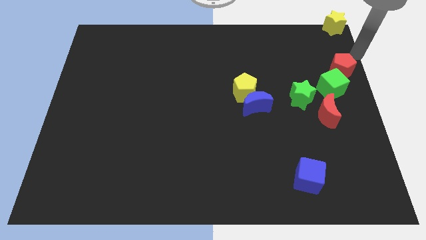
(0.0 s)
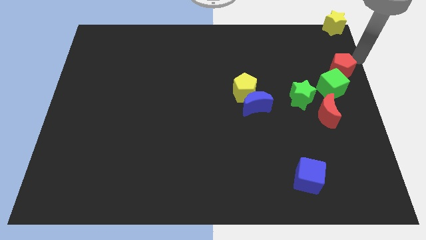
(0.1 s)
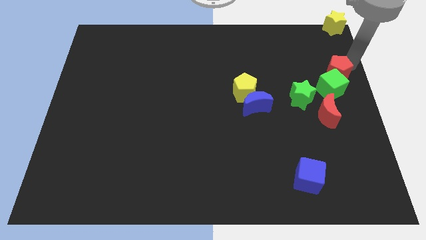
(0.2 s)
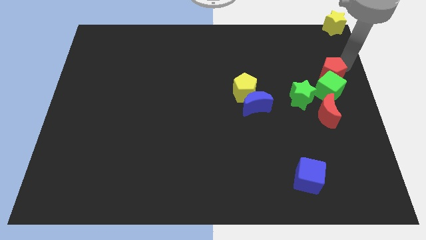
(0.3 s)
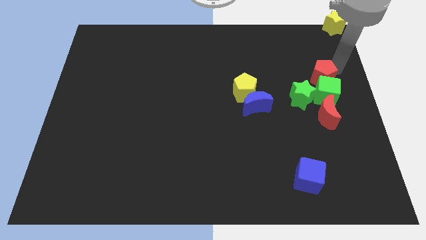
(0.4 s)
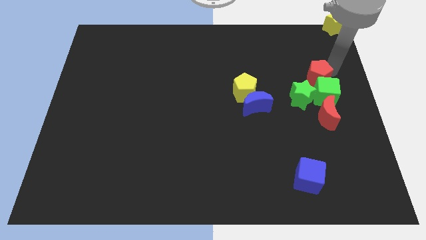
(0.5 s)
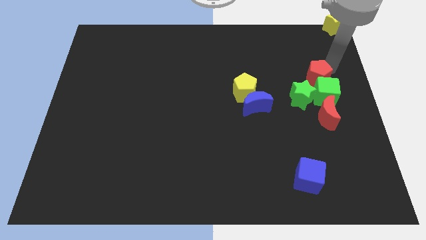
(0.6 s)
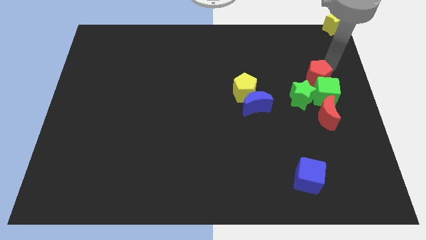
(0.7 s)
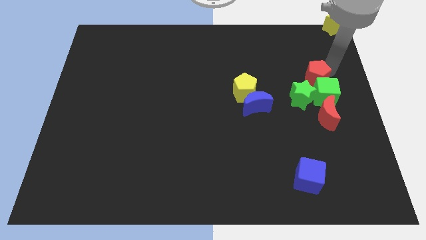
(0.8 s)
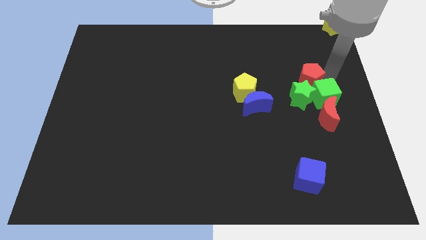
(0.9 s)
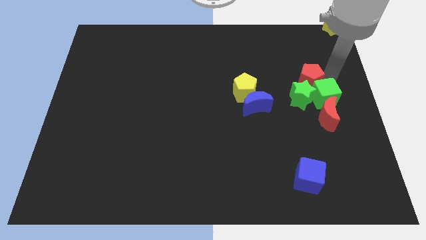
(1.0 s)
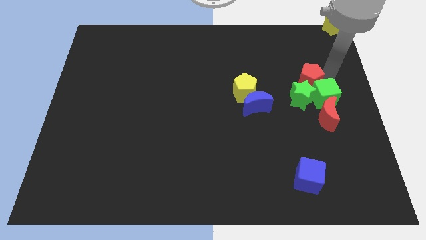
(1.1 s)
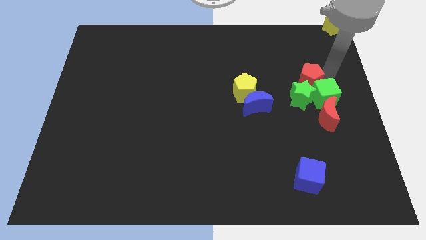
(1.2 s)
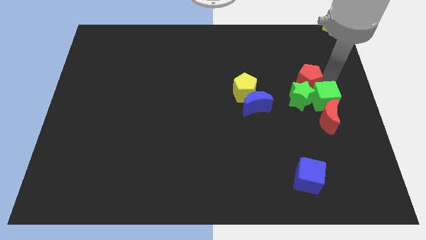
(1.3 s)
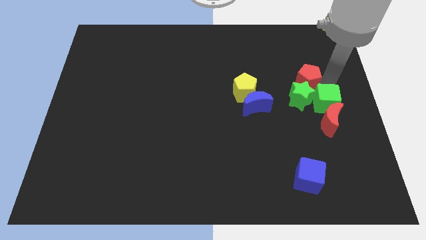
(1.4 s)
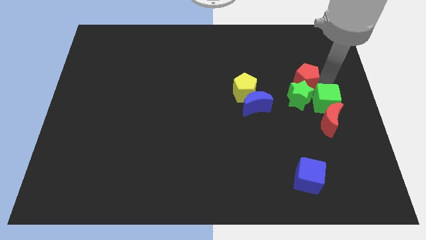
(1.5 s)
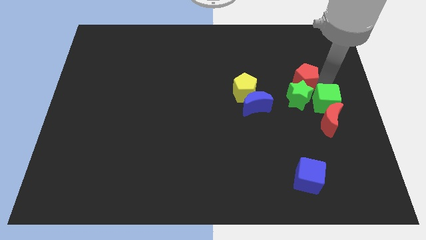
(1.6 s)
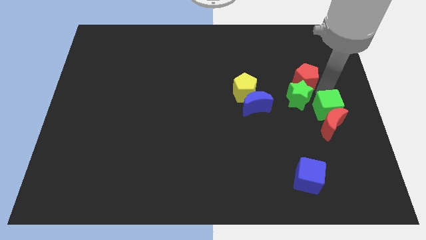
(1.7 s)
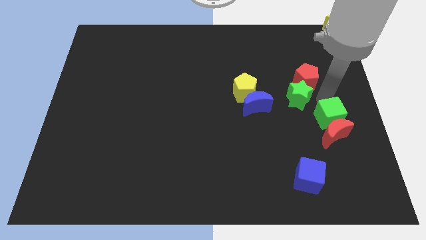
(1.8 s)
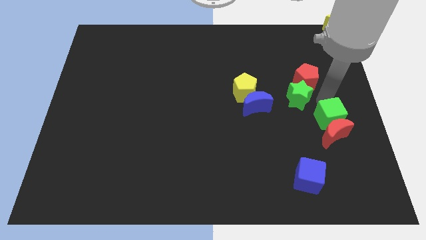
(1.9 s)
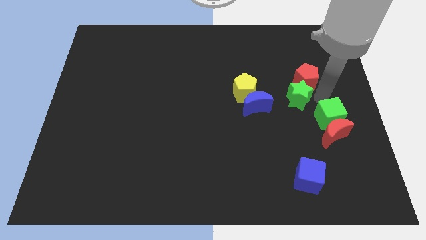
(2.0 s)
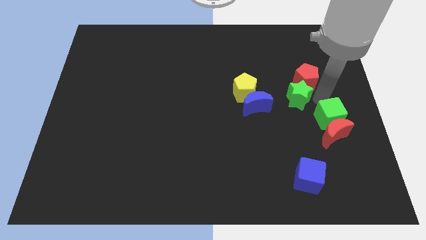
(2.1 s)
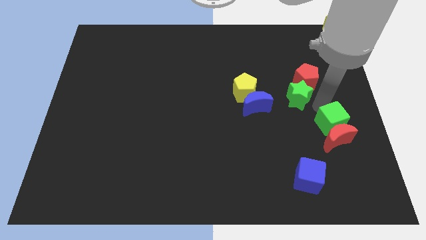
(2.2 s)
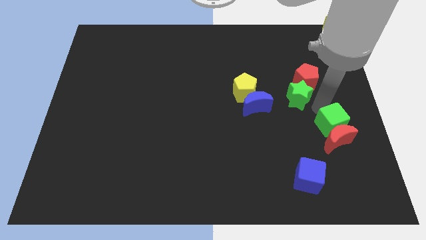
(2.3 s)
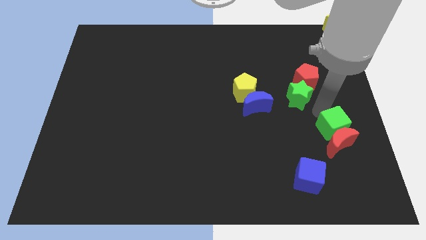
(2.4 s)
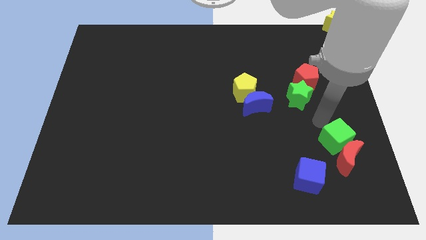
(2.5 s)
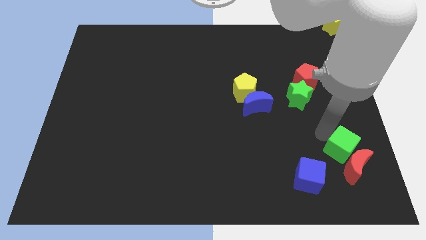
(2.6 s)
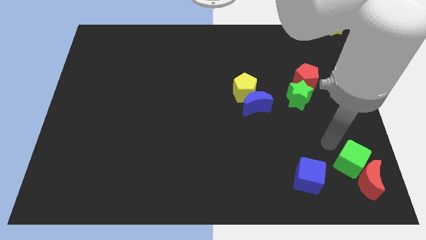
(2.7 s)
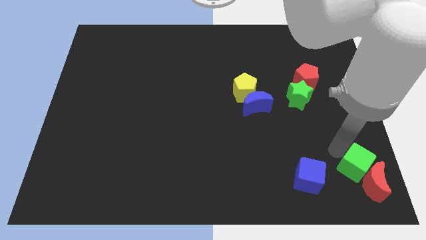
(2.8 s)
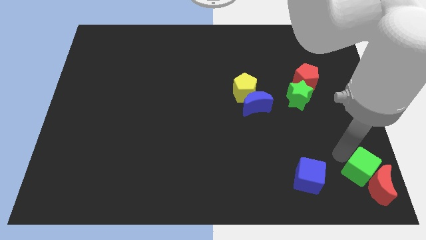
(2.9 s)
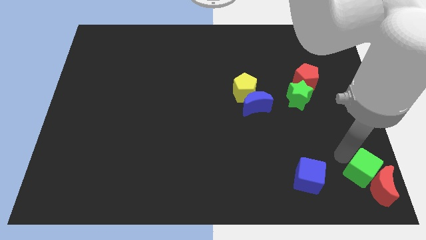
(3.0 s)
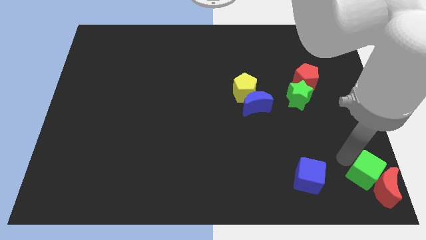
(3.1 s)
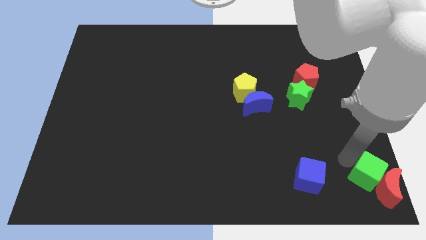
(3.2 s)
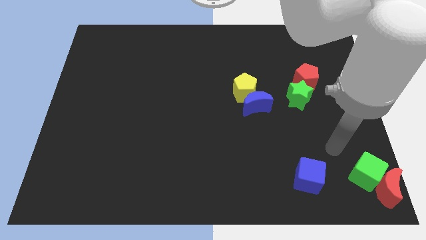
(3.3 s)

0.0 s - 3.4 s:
push green cube and red crescent towards bottom right corner

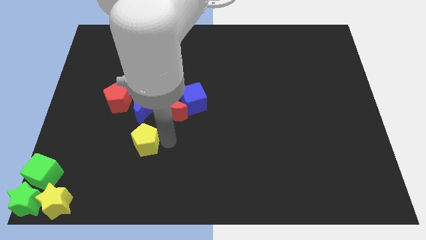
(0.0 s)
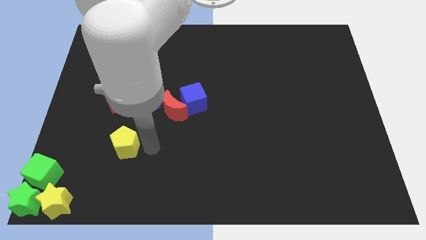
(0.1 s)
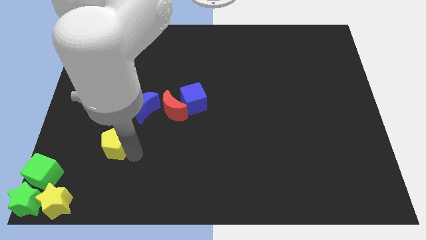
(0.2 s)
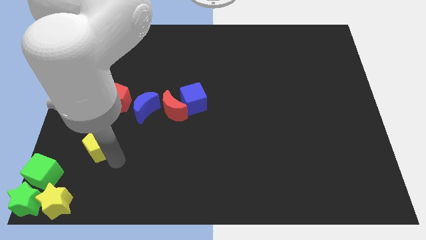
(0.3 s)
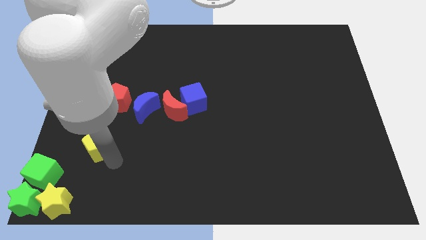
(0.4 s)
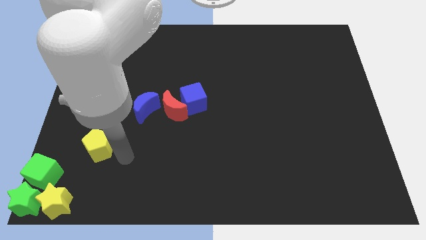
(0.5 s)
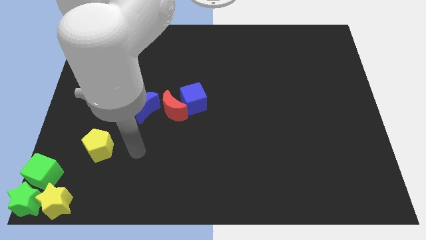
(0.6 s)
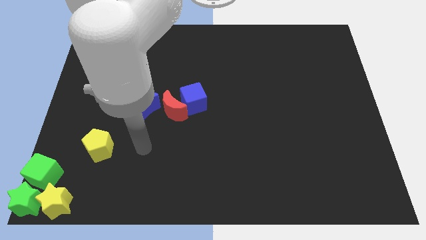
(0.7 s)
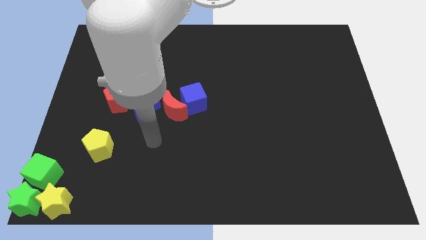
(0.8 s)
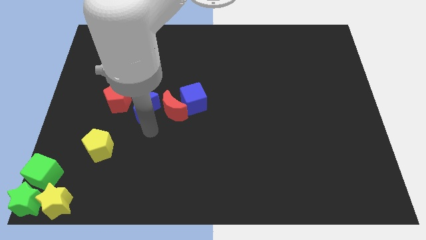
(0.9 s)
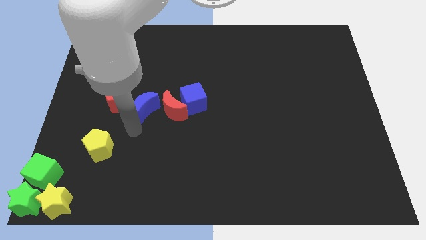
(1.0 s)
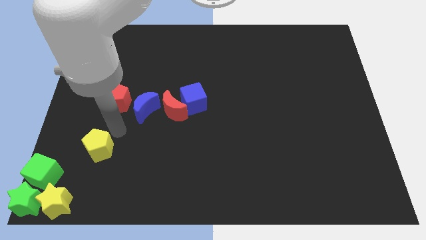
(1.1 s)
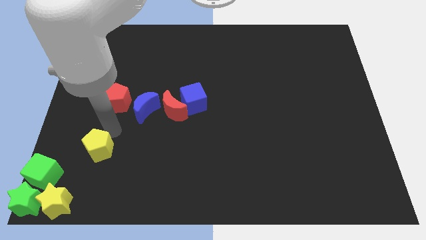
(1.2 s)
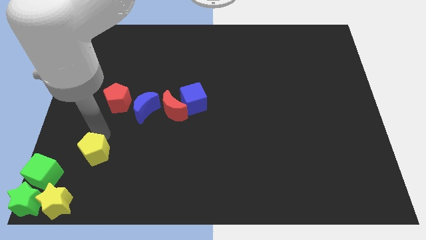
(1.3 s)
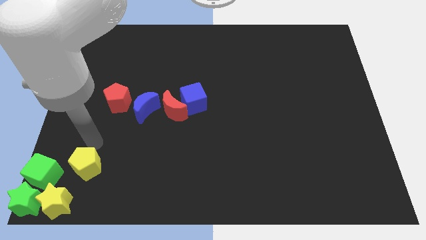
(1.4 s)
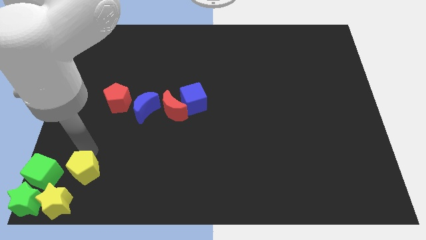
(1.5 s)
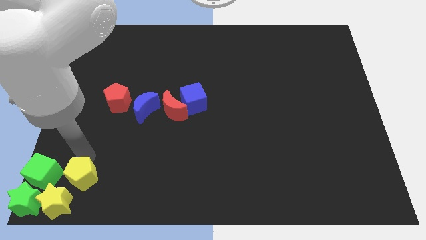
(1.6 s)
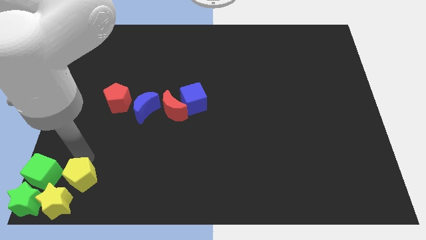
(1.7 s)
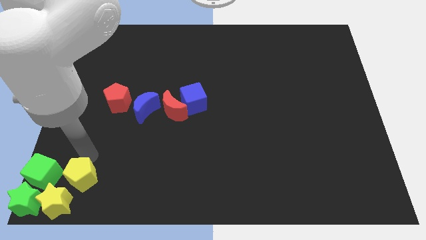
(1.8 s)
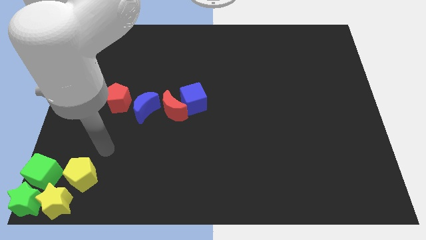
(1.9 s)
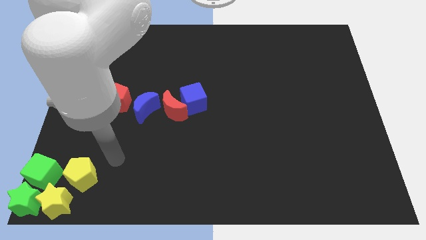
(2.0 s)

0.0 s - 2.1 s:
slide the yellow pentagon at the top right side of the yellow star

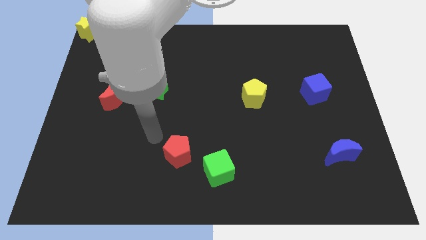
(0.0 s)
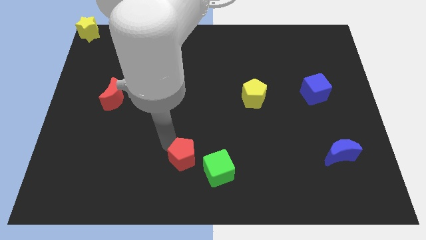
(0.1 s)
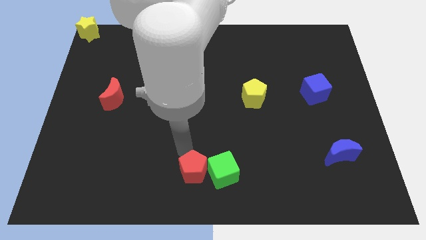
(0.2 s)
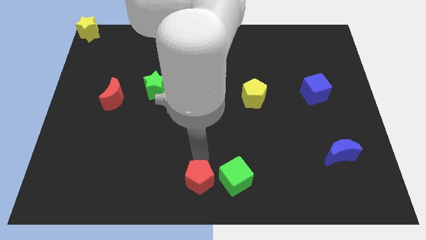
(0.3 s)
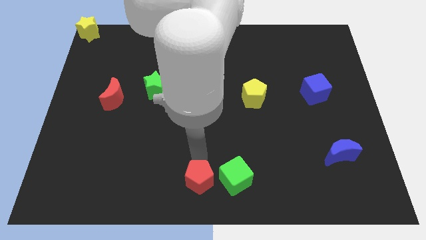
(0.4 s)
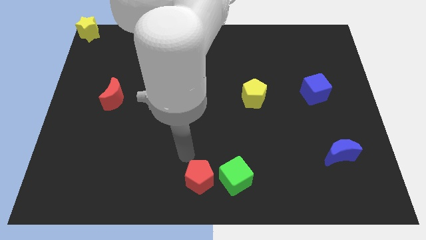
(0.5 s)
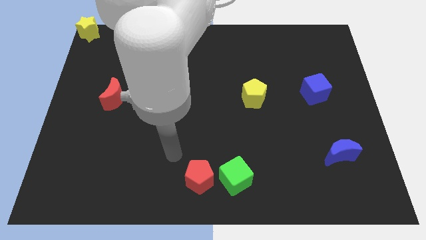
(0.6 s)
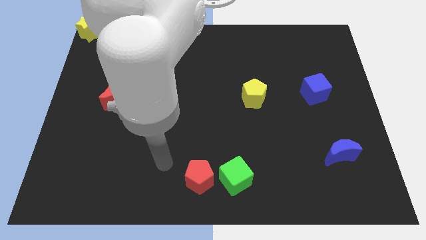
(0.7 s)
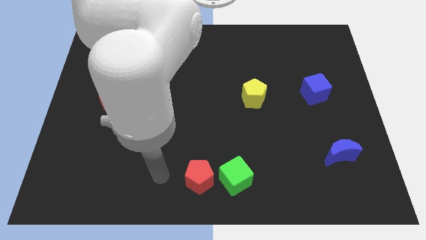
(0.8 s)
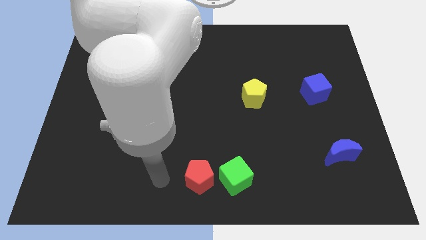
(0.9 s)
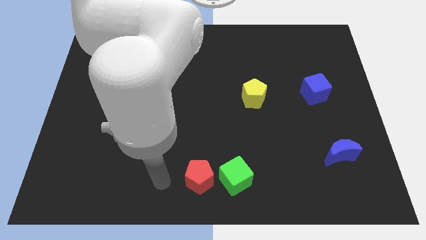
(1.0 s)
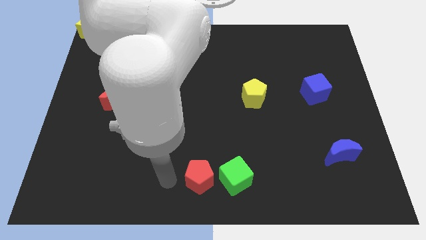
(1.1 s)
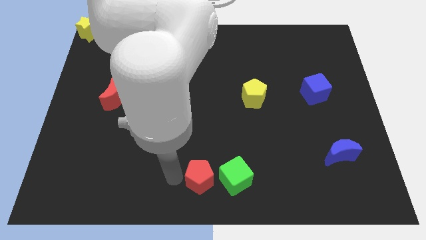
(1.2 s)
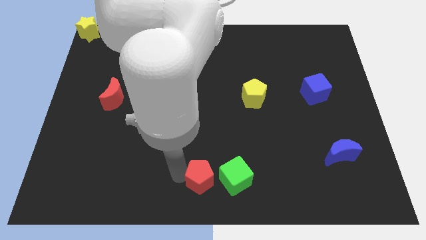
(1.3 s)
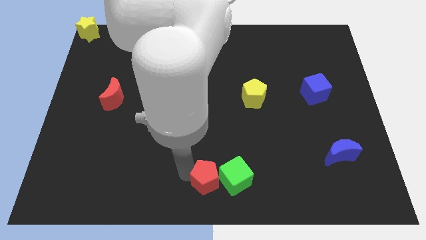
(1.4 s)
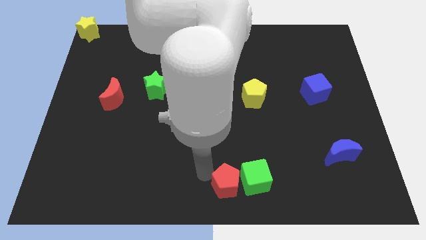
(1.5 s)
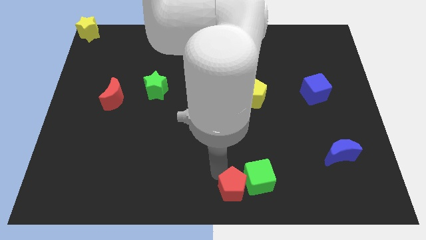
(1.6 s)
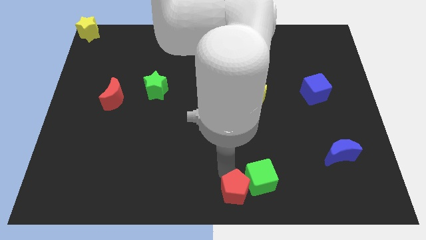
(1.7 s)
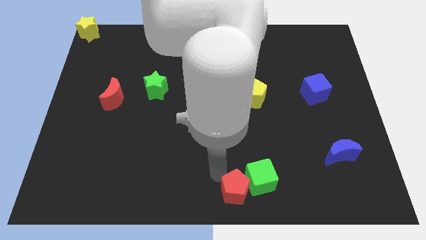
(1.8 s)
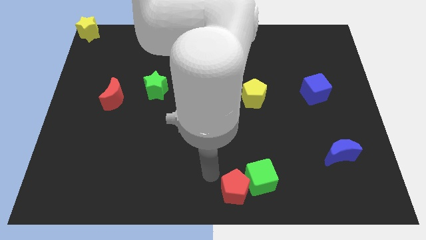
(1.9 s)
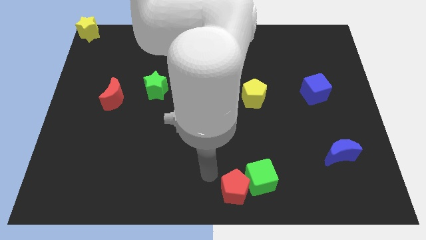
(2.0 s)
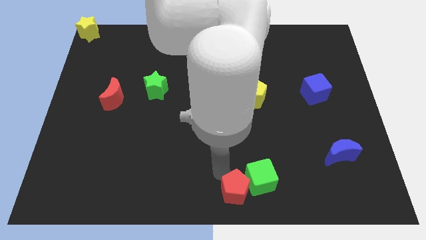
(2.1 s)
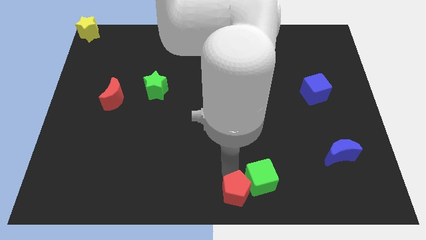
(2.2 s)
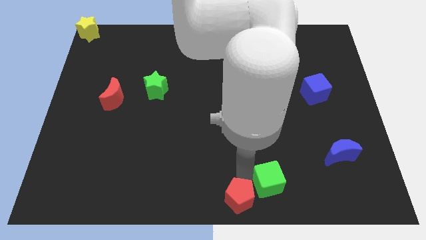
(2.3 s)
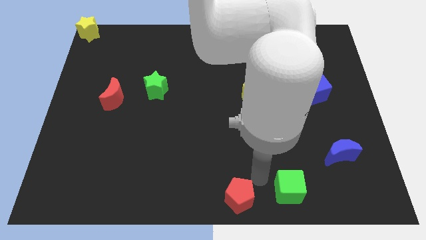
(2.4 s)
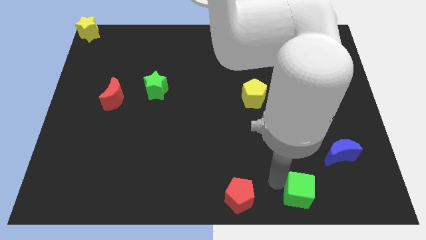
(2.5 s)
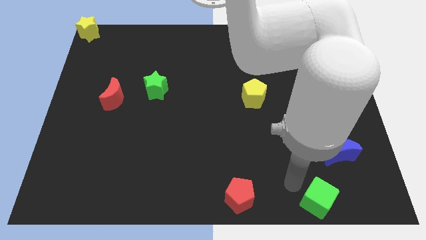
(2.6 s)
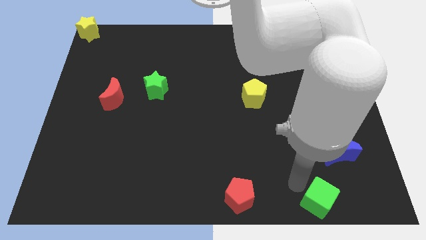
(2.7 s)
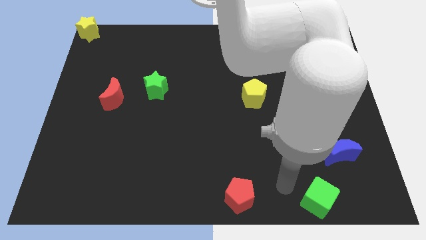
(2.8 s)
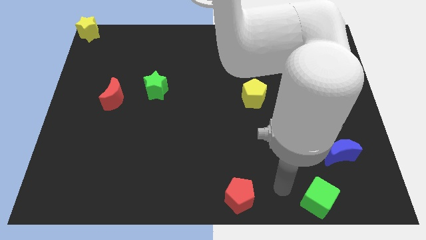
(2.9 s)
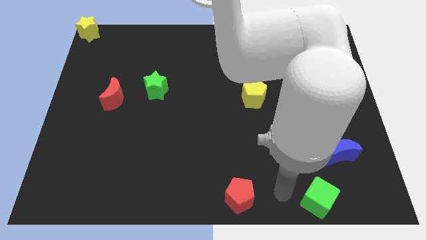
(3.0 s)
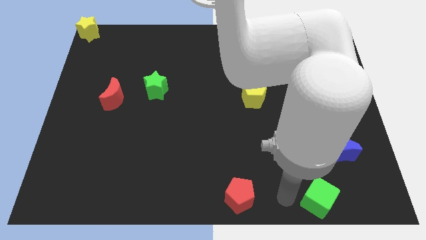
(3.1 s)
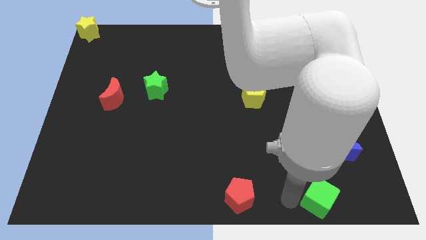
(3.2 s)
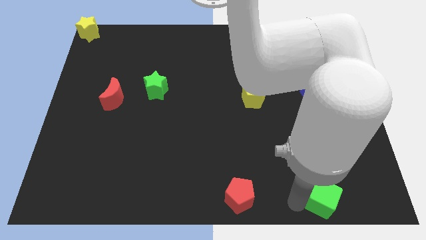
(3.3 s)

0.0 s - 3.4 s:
push the green cube and red pentagon to the bottom right side of board

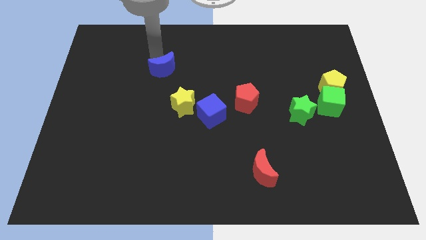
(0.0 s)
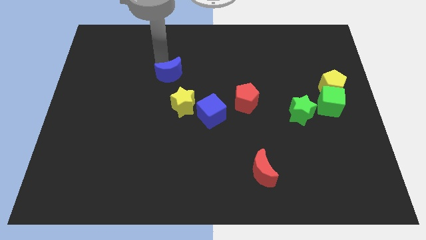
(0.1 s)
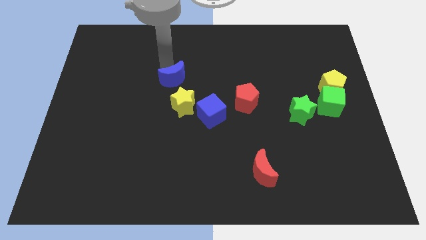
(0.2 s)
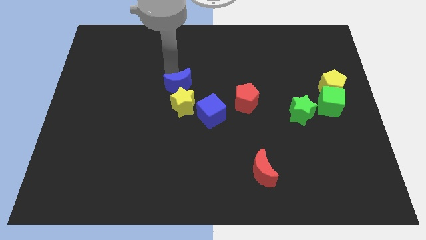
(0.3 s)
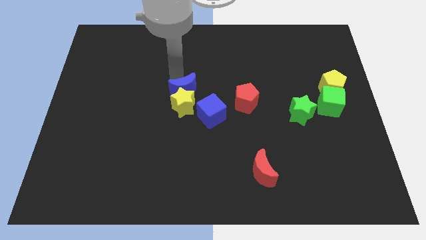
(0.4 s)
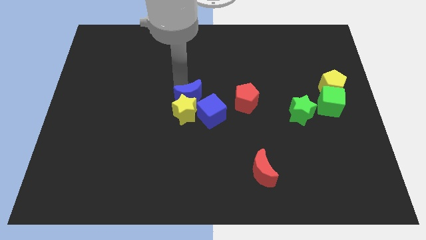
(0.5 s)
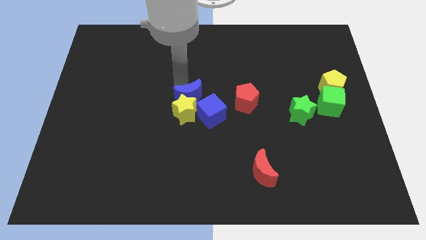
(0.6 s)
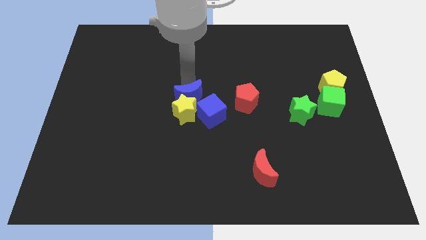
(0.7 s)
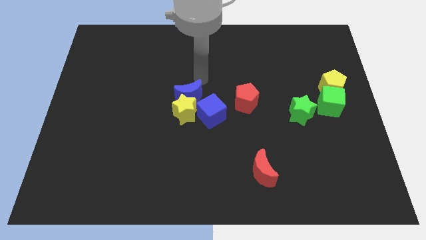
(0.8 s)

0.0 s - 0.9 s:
push the blue moon into the yellow star
